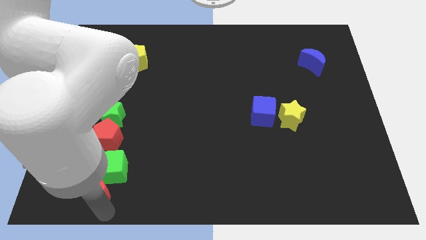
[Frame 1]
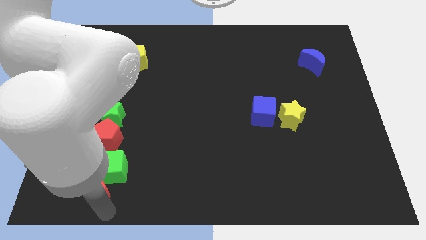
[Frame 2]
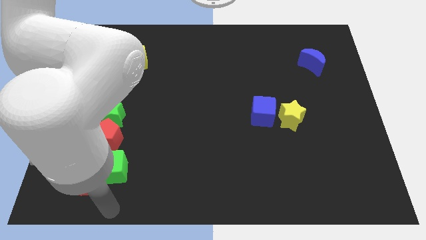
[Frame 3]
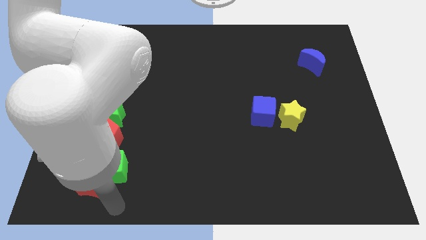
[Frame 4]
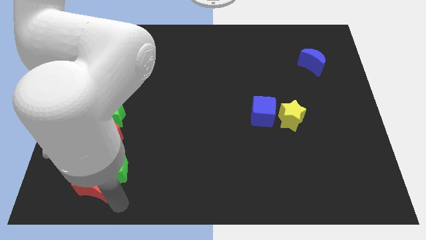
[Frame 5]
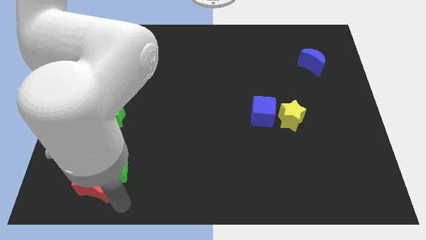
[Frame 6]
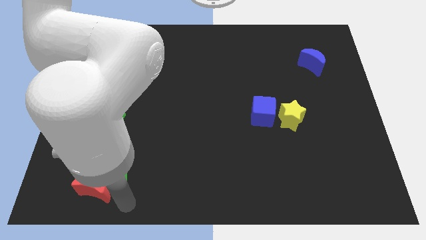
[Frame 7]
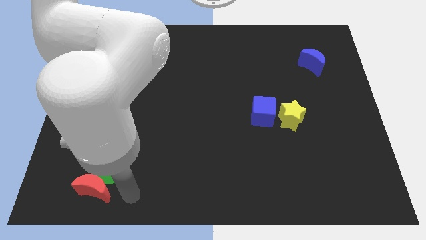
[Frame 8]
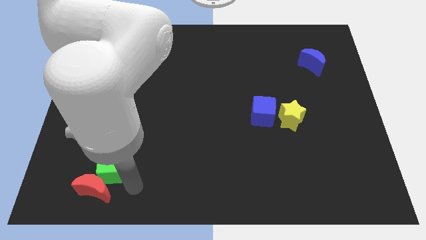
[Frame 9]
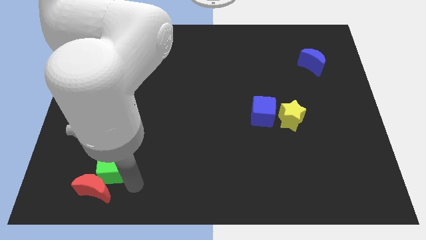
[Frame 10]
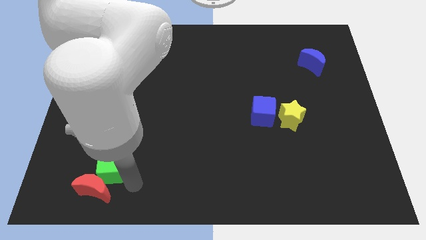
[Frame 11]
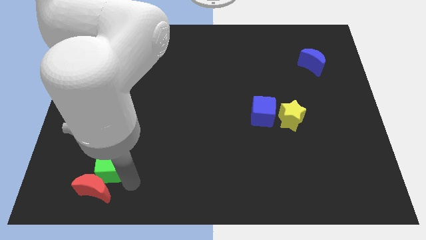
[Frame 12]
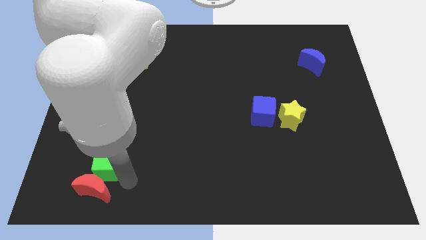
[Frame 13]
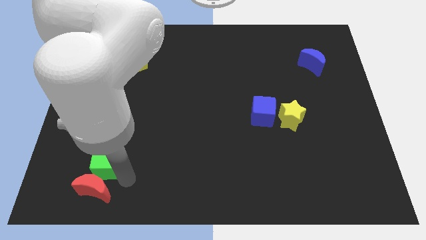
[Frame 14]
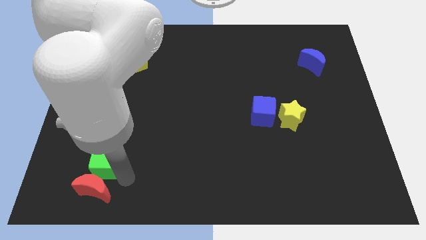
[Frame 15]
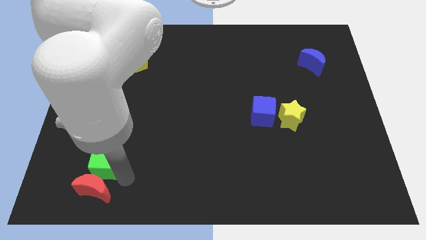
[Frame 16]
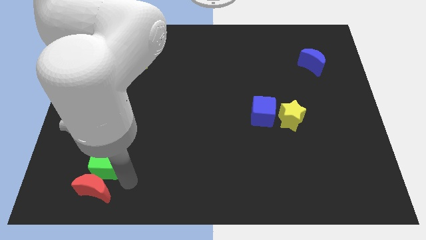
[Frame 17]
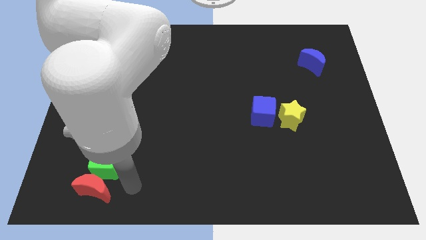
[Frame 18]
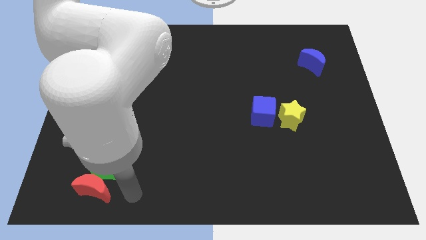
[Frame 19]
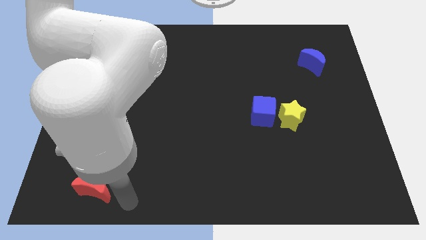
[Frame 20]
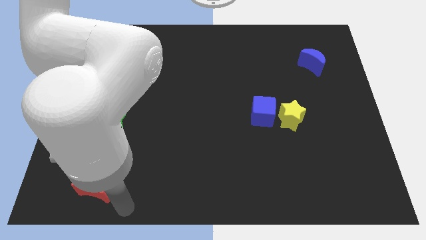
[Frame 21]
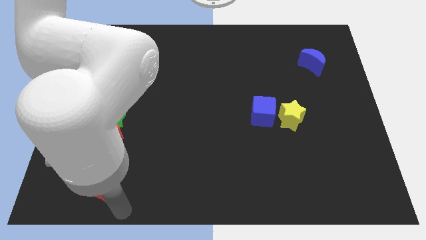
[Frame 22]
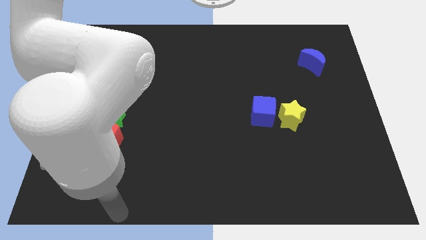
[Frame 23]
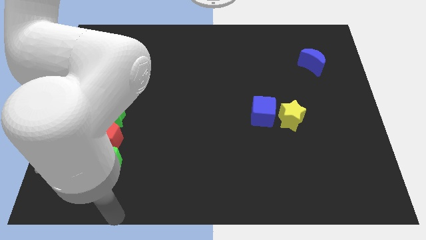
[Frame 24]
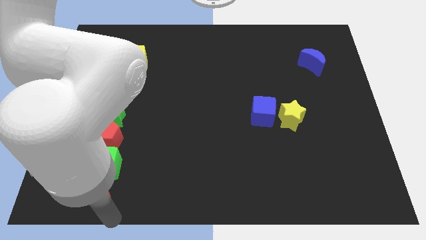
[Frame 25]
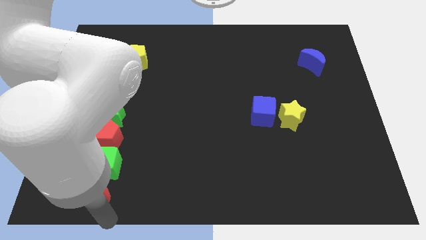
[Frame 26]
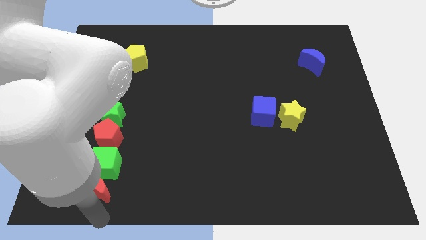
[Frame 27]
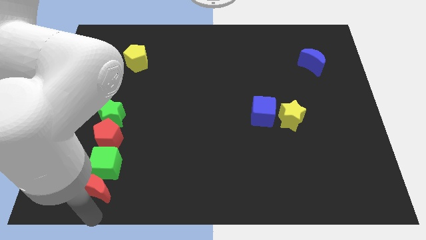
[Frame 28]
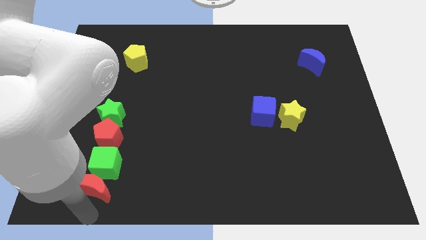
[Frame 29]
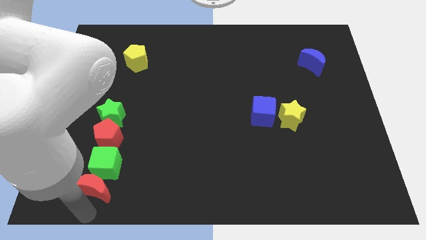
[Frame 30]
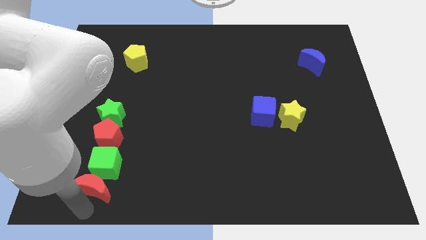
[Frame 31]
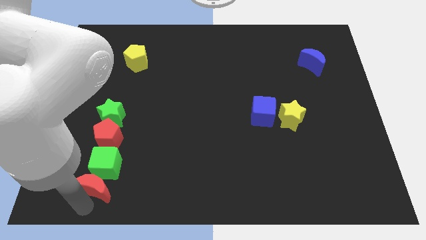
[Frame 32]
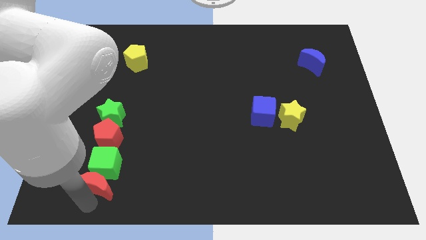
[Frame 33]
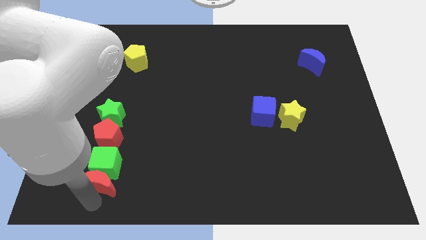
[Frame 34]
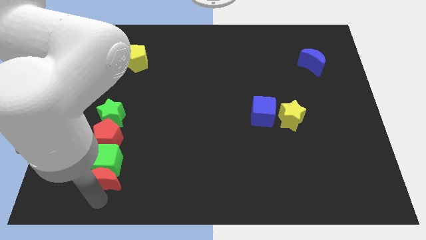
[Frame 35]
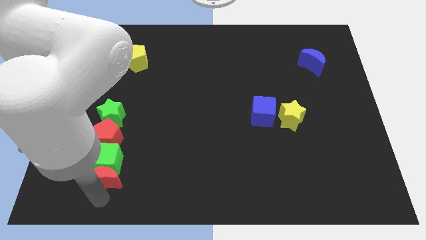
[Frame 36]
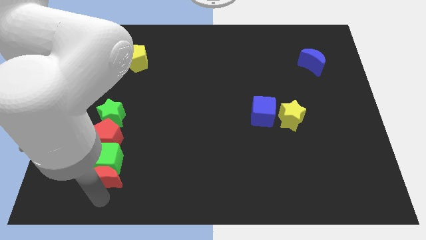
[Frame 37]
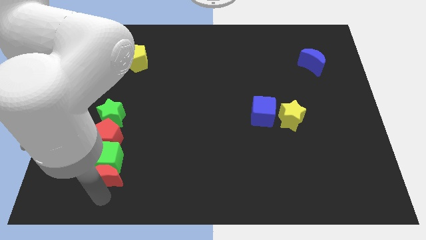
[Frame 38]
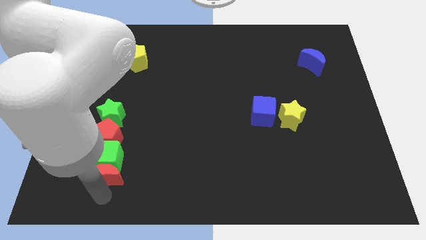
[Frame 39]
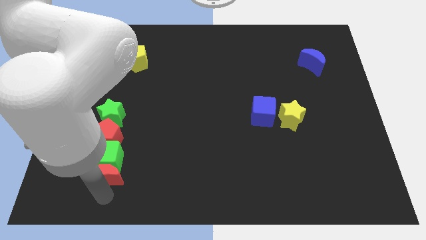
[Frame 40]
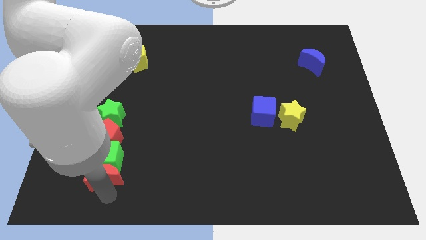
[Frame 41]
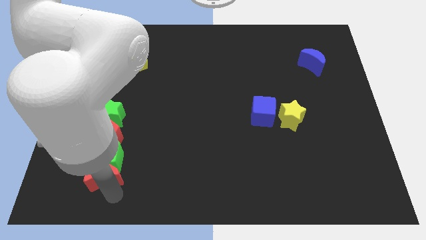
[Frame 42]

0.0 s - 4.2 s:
make a vertical line with the red moon green cube red pentagon and green star at the left side of the board

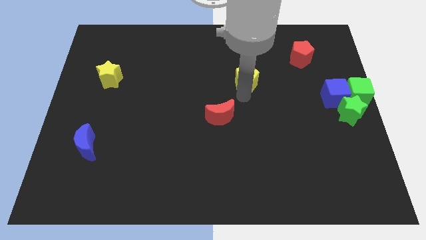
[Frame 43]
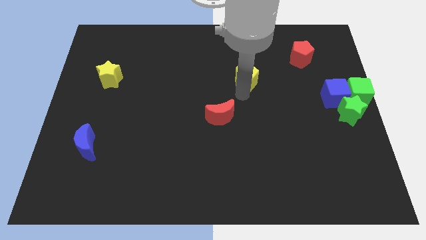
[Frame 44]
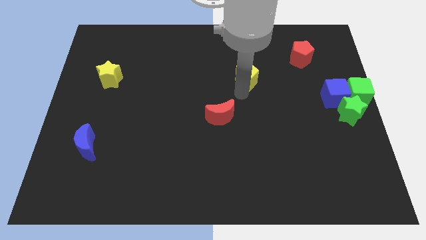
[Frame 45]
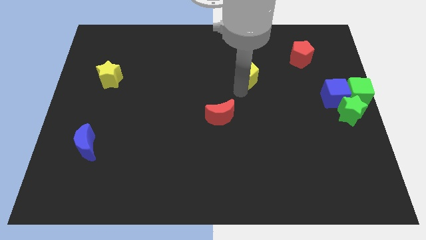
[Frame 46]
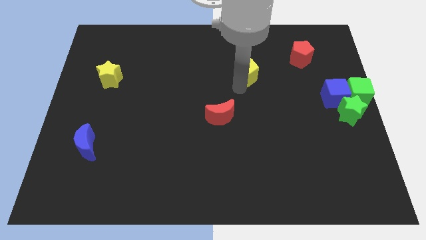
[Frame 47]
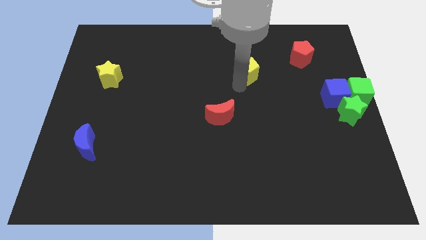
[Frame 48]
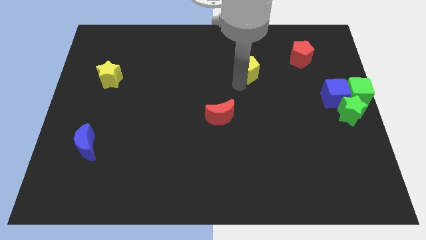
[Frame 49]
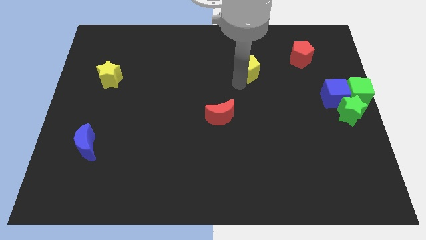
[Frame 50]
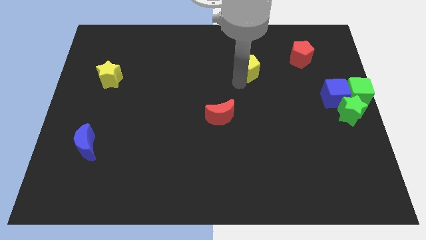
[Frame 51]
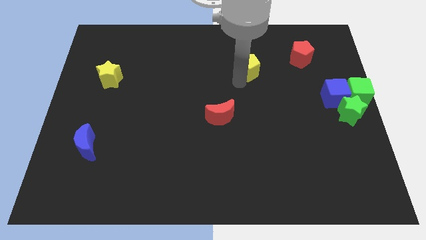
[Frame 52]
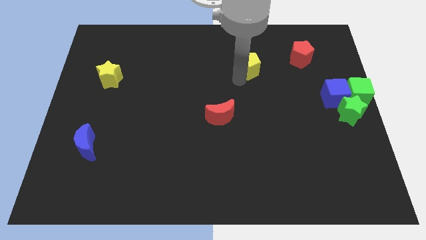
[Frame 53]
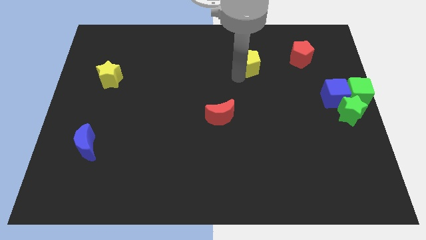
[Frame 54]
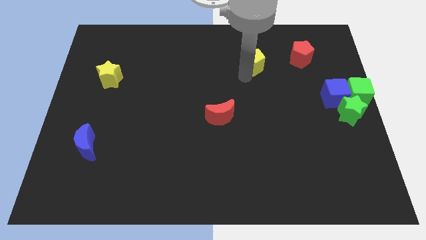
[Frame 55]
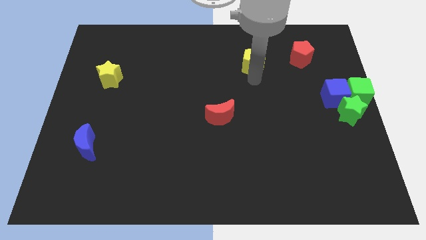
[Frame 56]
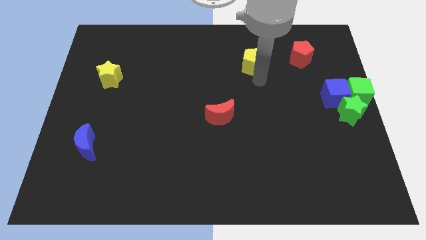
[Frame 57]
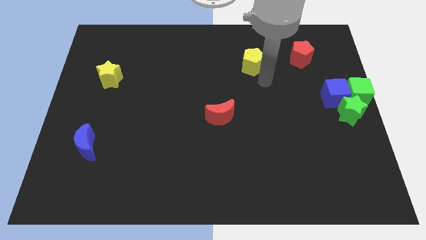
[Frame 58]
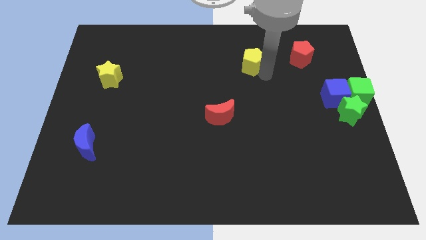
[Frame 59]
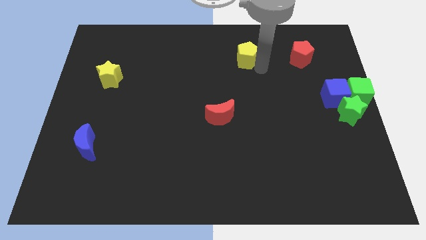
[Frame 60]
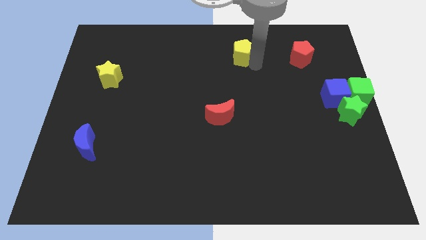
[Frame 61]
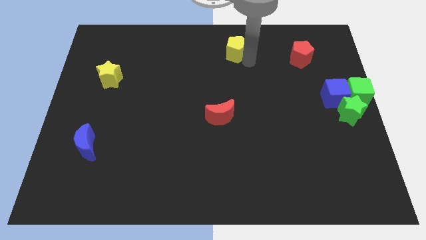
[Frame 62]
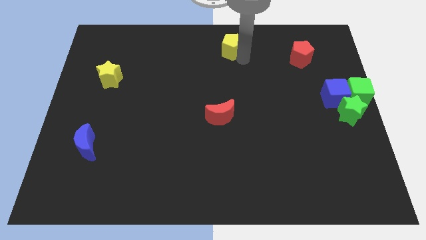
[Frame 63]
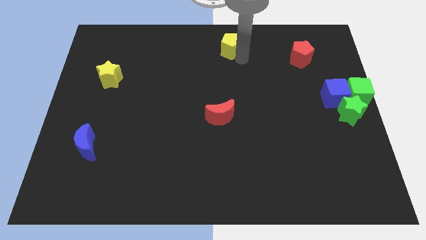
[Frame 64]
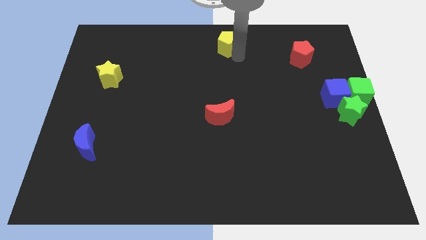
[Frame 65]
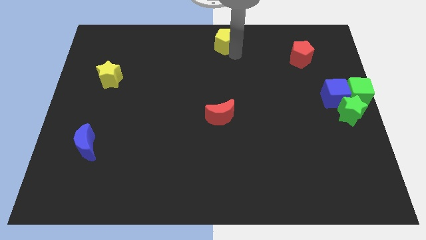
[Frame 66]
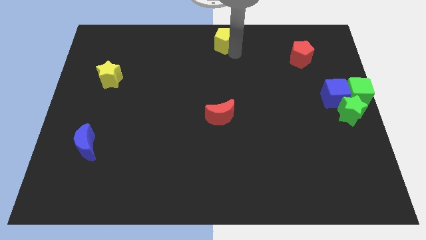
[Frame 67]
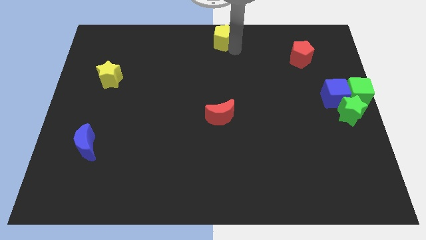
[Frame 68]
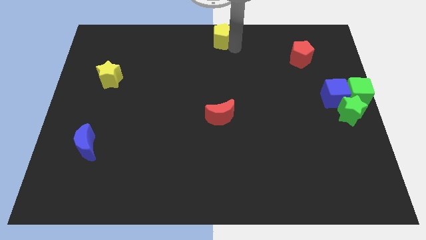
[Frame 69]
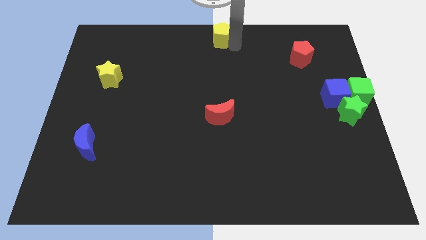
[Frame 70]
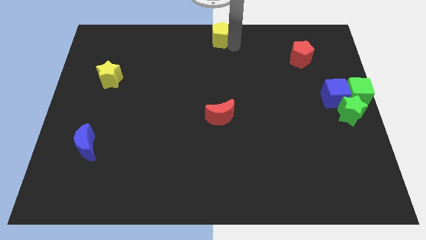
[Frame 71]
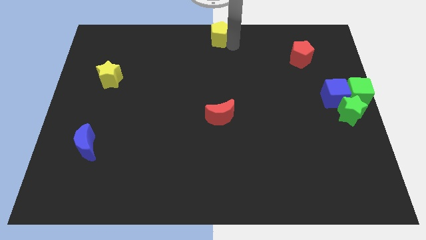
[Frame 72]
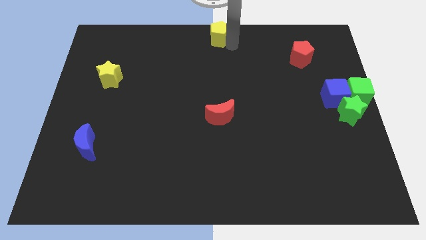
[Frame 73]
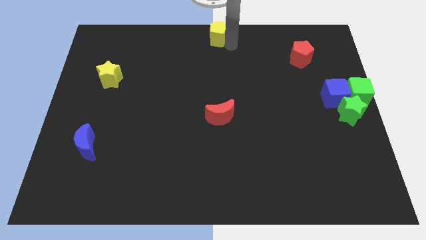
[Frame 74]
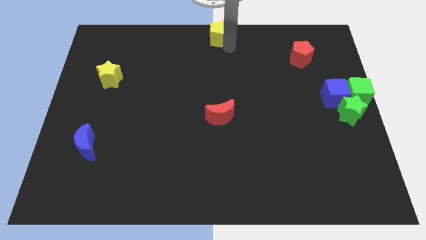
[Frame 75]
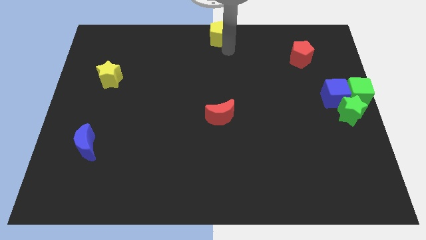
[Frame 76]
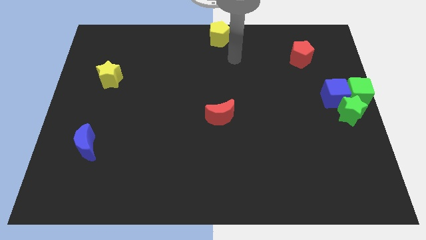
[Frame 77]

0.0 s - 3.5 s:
place the yellow pentagon at the top center of the board

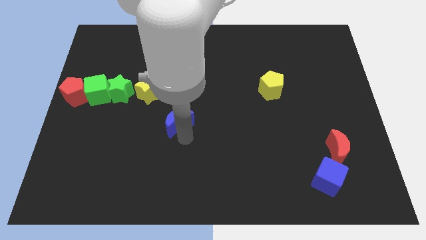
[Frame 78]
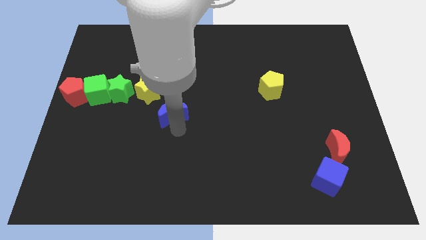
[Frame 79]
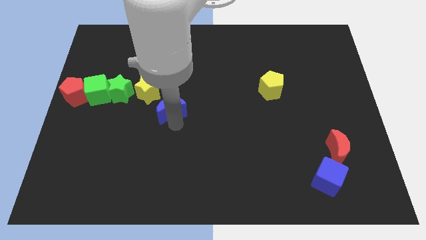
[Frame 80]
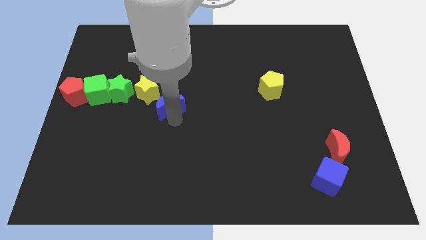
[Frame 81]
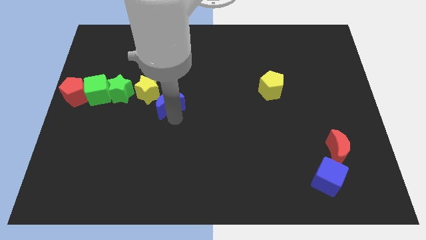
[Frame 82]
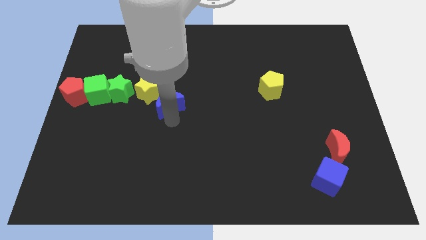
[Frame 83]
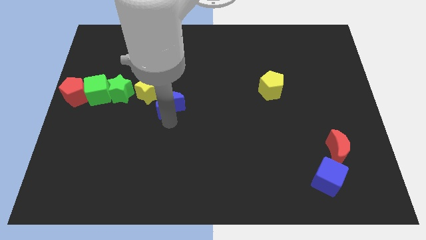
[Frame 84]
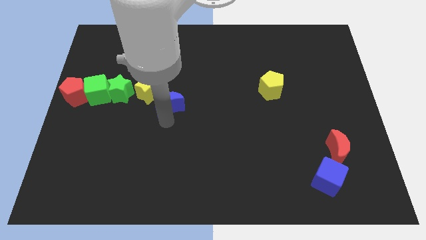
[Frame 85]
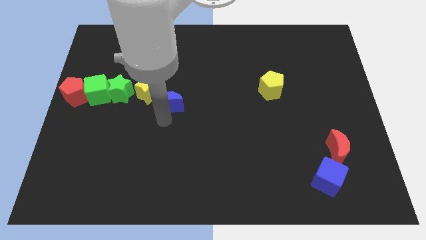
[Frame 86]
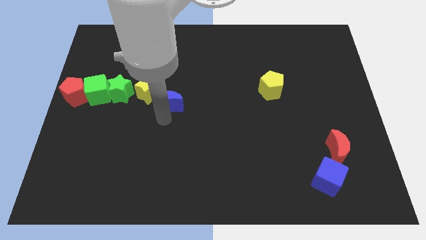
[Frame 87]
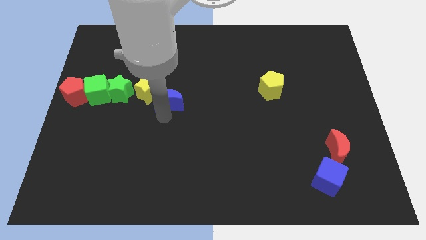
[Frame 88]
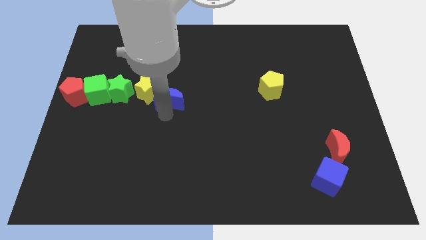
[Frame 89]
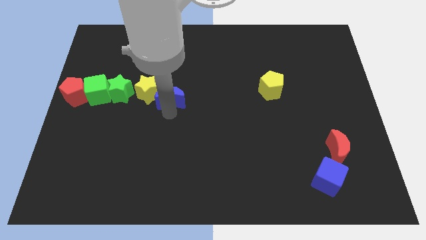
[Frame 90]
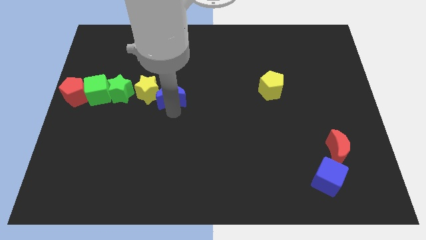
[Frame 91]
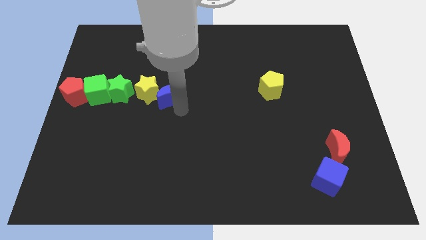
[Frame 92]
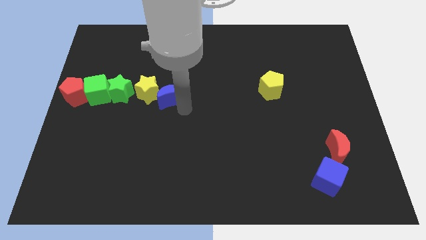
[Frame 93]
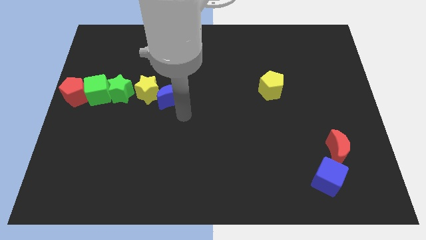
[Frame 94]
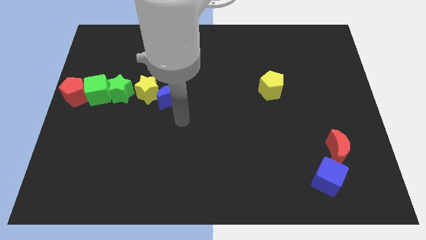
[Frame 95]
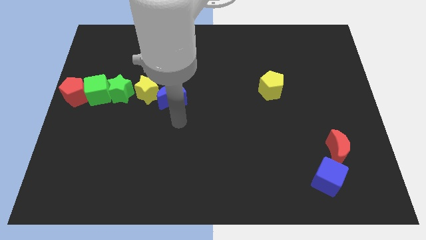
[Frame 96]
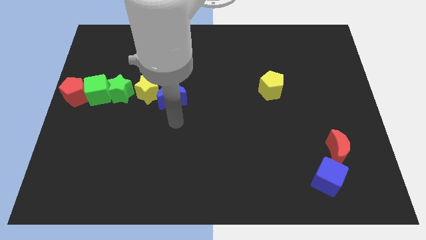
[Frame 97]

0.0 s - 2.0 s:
push the blue moon close to the yellow star
